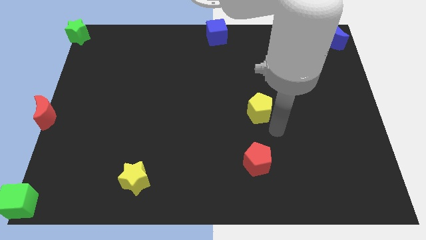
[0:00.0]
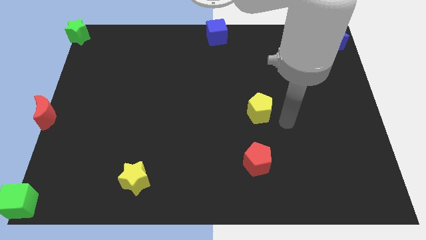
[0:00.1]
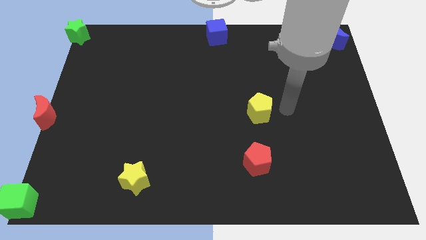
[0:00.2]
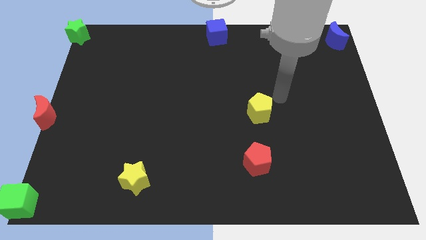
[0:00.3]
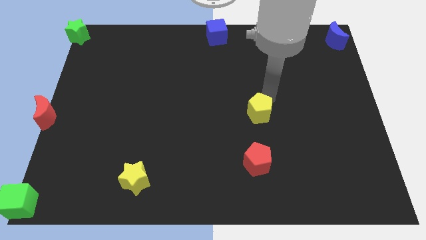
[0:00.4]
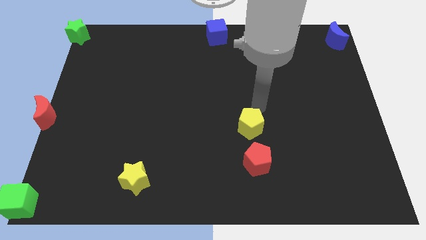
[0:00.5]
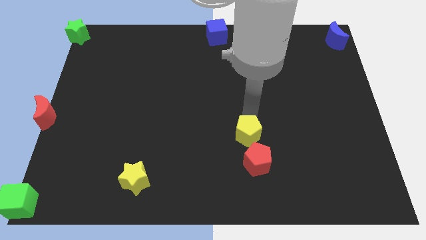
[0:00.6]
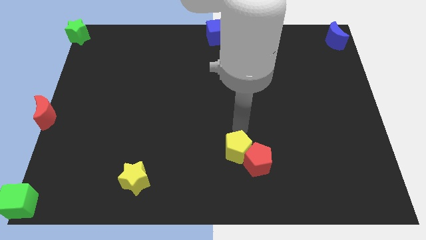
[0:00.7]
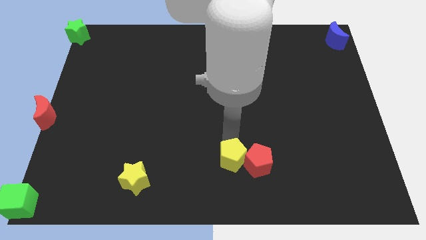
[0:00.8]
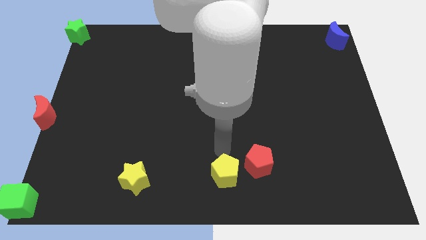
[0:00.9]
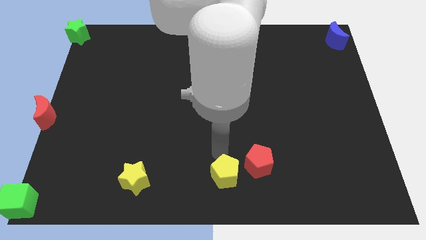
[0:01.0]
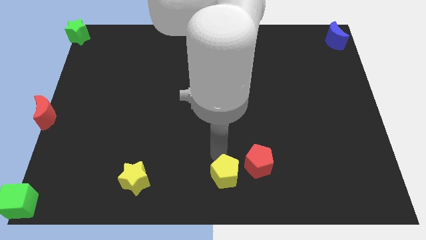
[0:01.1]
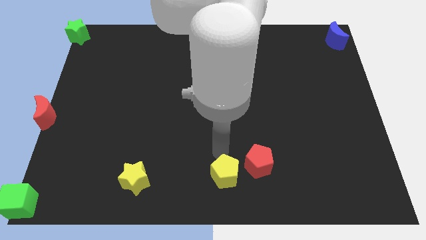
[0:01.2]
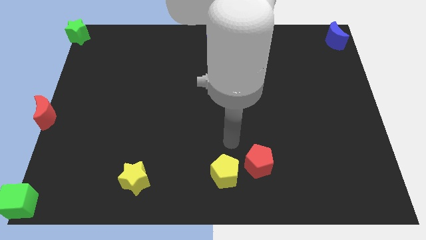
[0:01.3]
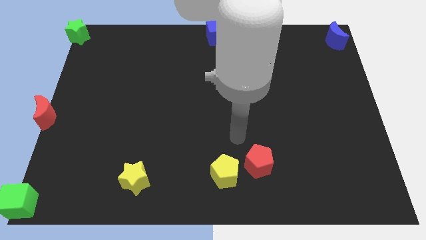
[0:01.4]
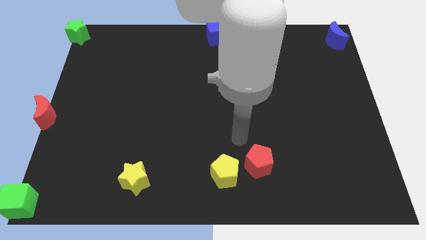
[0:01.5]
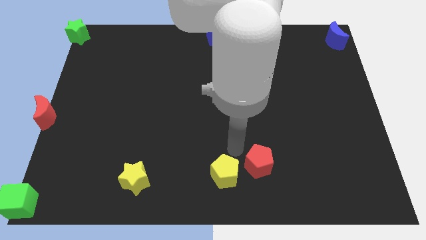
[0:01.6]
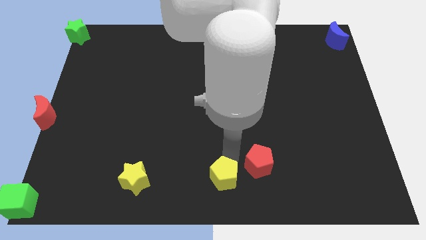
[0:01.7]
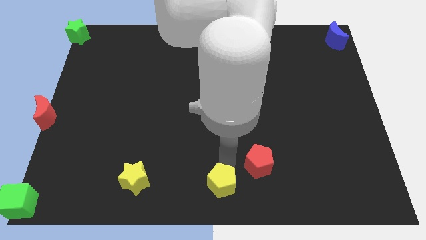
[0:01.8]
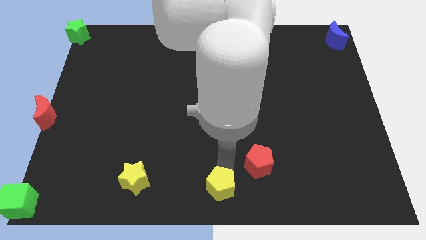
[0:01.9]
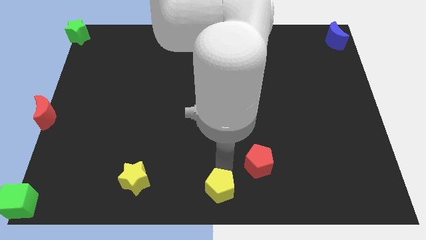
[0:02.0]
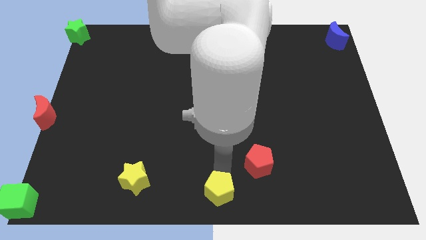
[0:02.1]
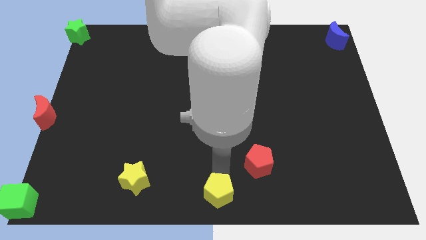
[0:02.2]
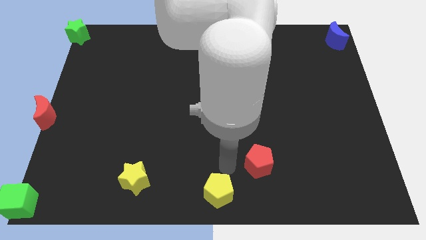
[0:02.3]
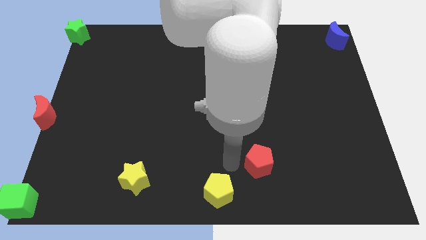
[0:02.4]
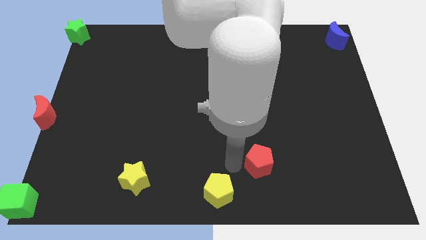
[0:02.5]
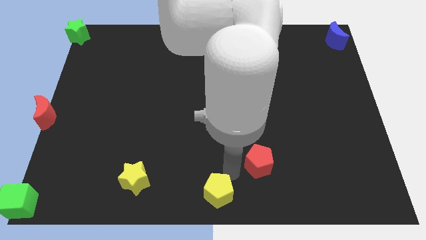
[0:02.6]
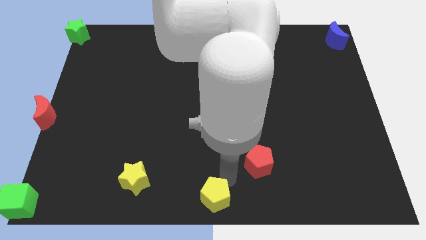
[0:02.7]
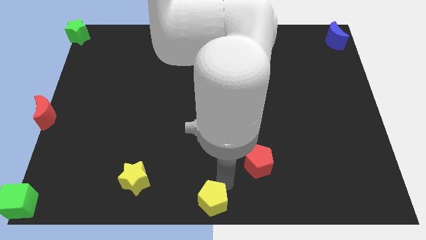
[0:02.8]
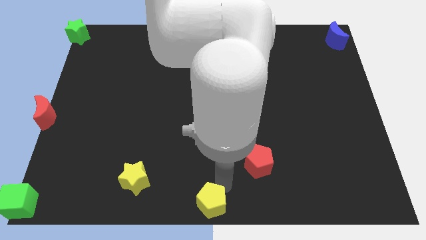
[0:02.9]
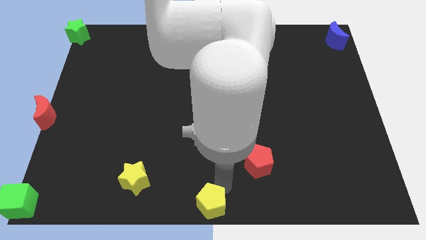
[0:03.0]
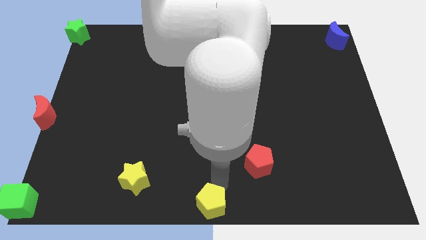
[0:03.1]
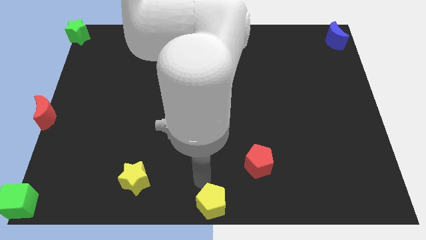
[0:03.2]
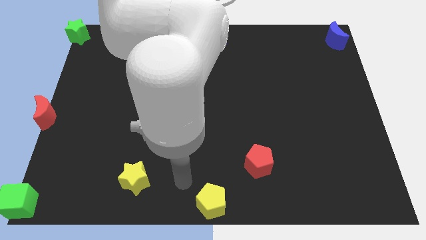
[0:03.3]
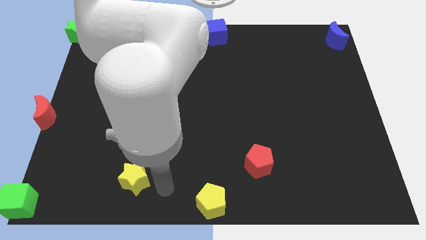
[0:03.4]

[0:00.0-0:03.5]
push the yellow pentagon to the bottom center of the board

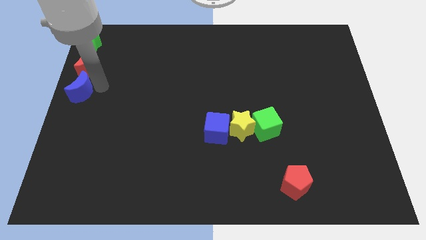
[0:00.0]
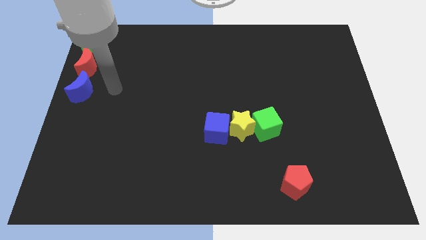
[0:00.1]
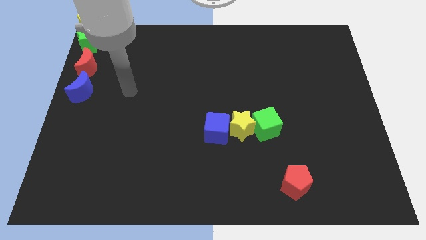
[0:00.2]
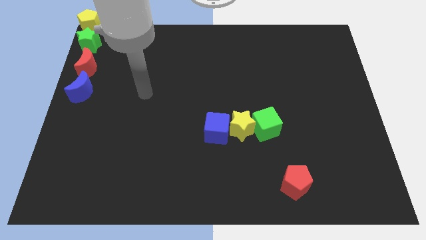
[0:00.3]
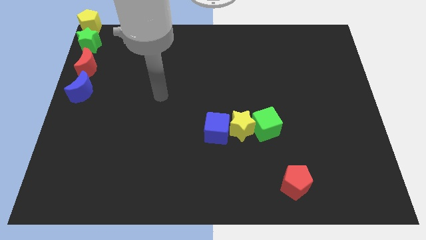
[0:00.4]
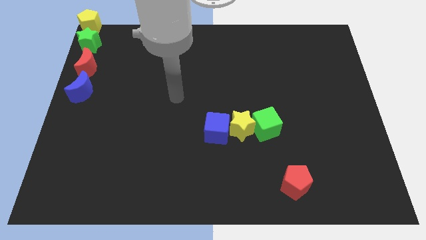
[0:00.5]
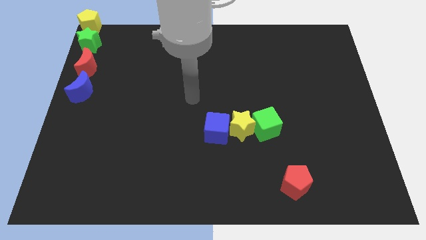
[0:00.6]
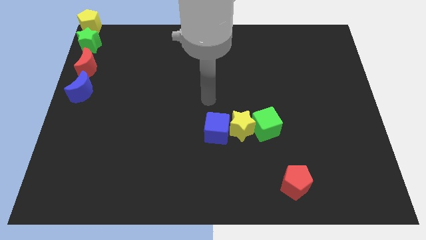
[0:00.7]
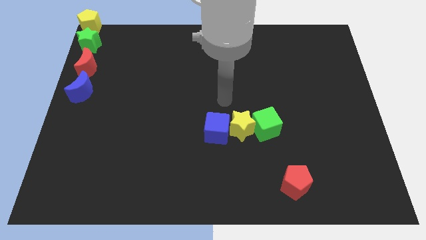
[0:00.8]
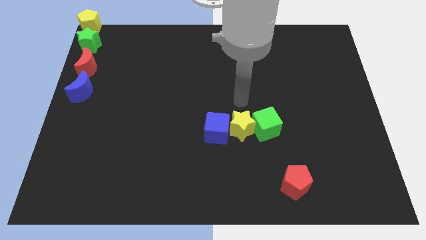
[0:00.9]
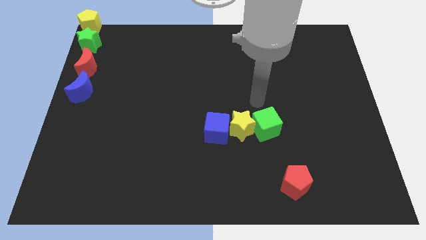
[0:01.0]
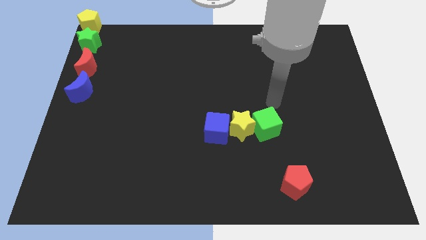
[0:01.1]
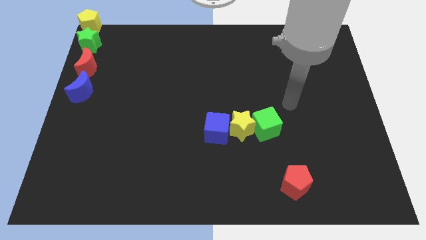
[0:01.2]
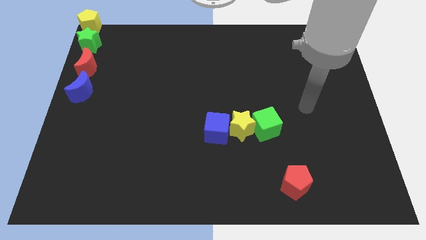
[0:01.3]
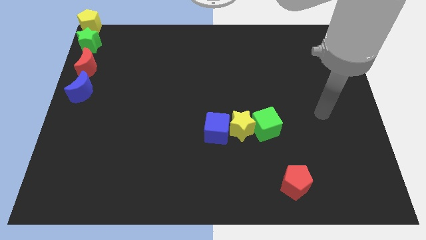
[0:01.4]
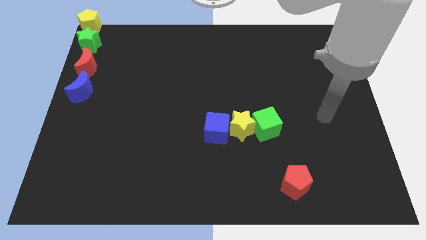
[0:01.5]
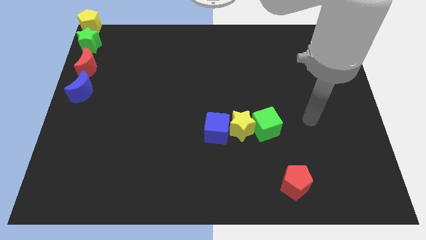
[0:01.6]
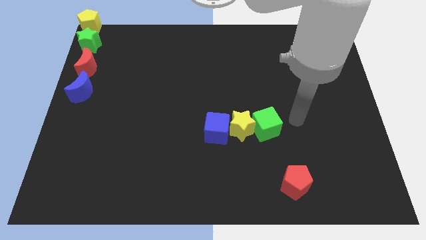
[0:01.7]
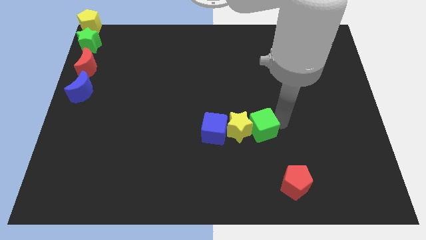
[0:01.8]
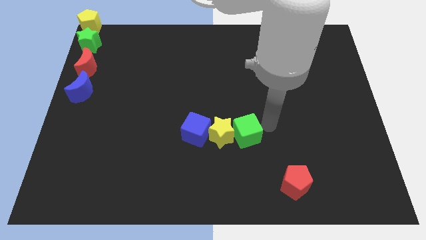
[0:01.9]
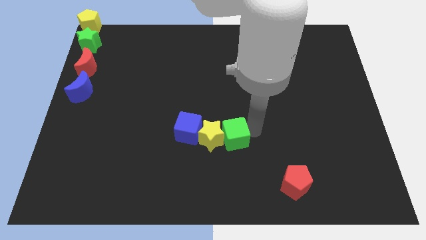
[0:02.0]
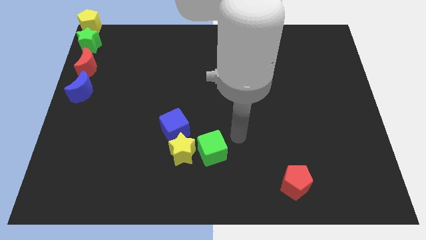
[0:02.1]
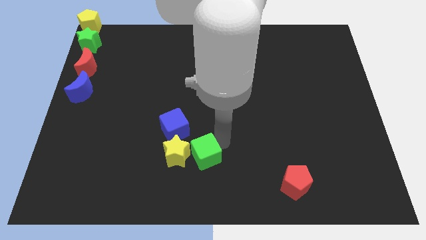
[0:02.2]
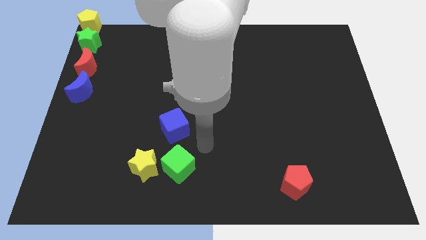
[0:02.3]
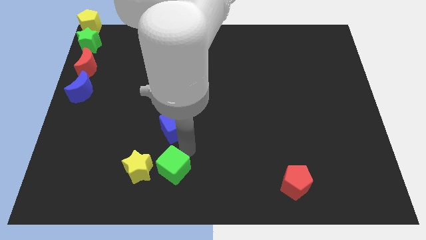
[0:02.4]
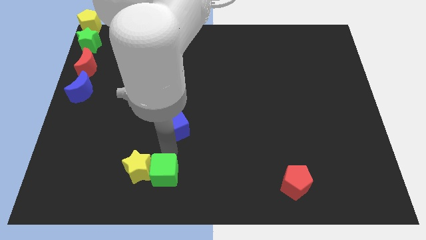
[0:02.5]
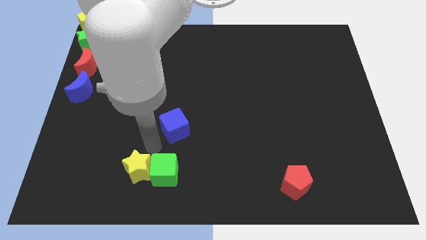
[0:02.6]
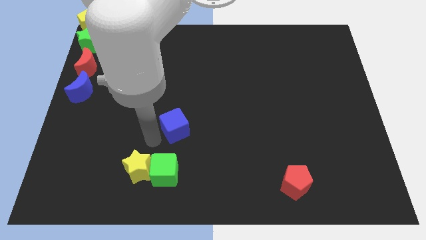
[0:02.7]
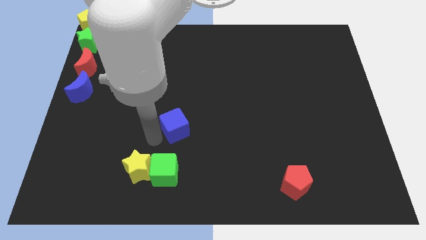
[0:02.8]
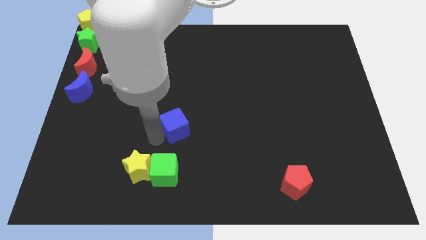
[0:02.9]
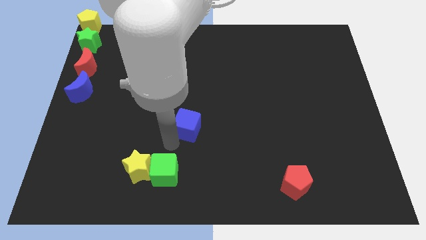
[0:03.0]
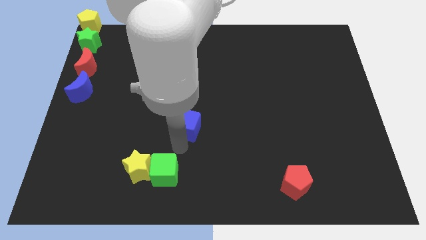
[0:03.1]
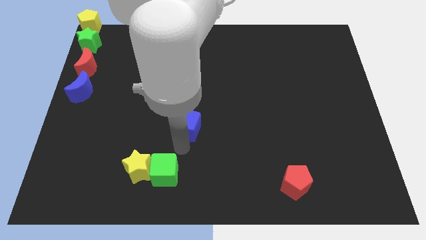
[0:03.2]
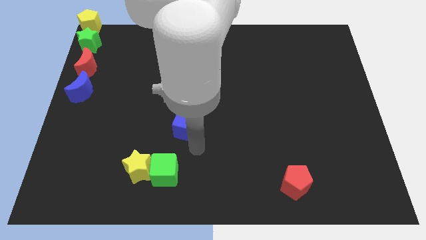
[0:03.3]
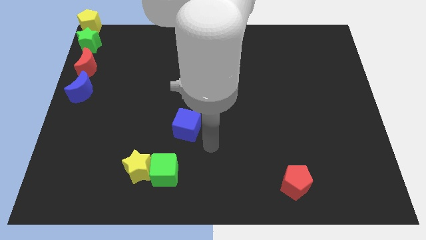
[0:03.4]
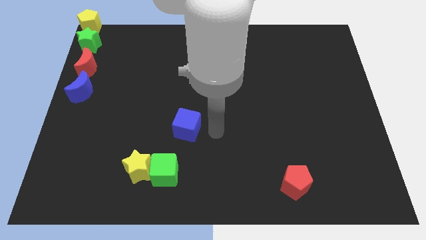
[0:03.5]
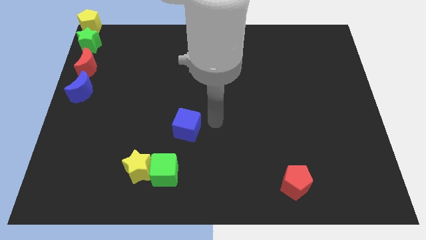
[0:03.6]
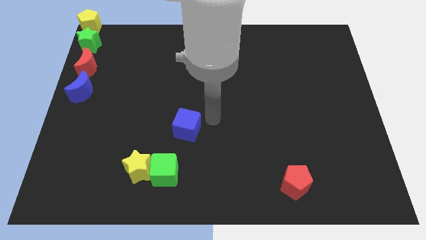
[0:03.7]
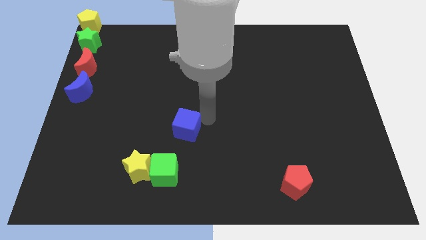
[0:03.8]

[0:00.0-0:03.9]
separate the blue cube from the yellow star and the green cube

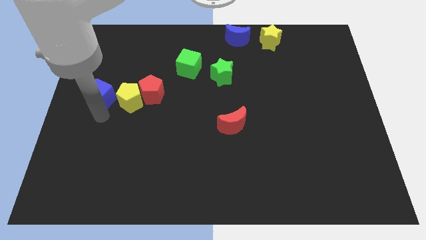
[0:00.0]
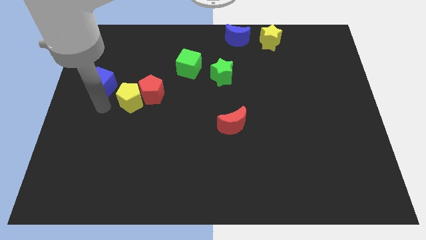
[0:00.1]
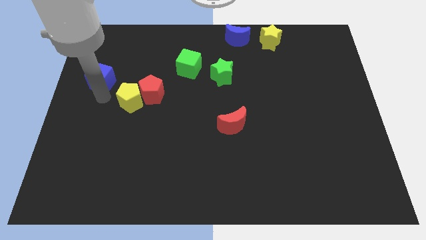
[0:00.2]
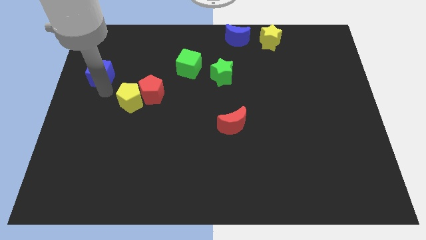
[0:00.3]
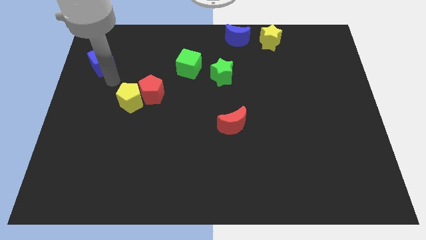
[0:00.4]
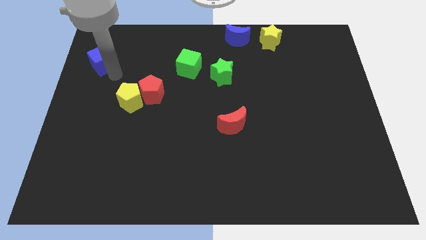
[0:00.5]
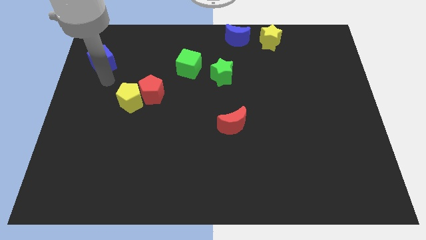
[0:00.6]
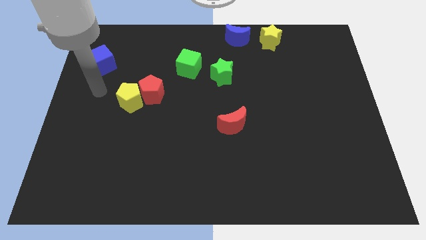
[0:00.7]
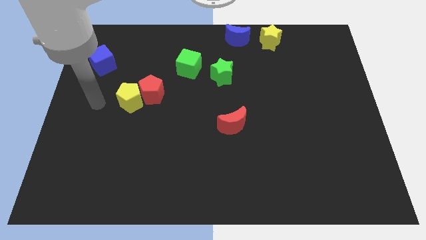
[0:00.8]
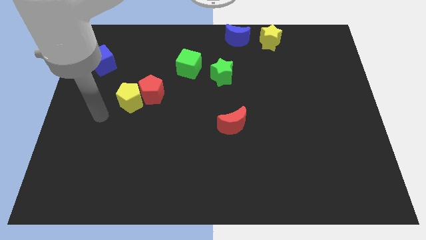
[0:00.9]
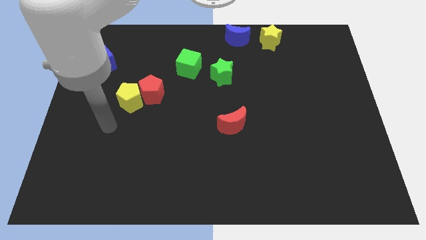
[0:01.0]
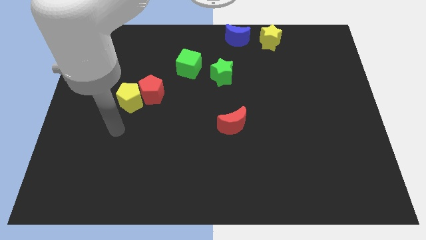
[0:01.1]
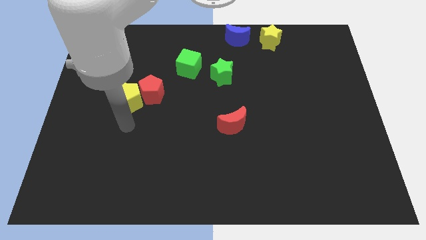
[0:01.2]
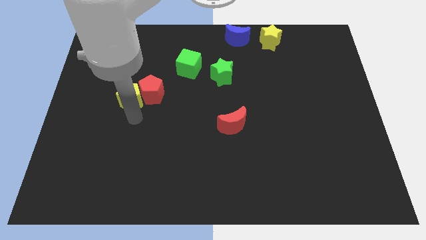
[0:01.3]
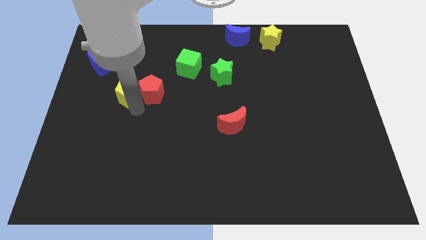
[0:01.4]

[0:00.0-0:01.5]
separate blue cube from the yellow pentagon
